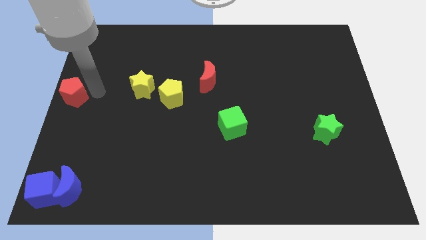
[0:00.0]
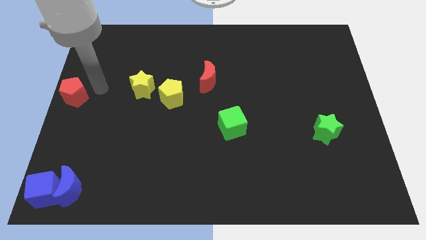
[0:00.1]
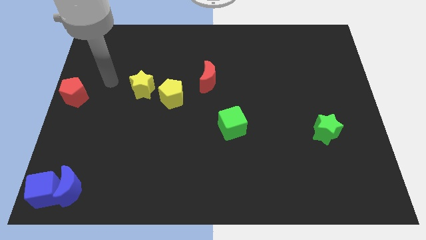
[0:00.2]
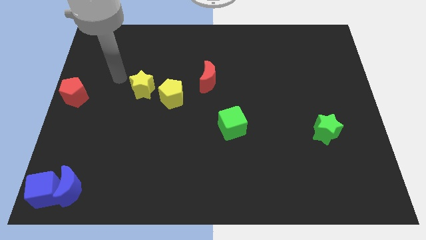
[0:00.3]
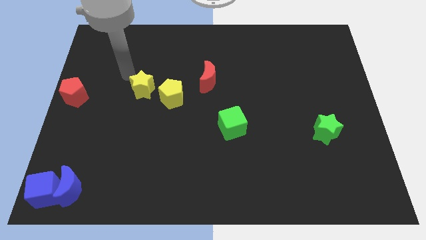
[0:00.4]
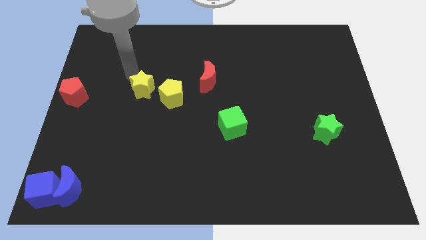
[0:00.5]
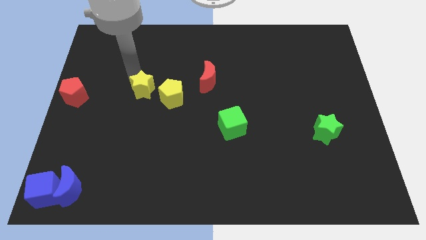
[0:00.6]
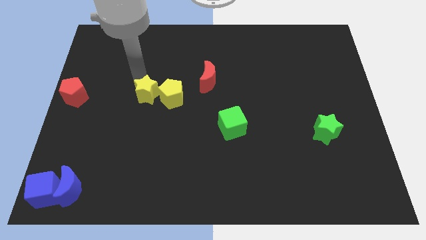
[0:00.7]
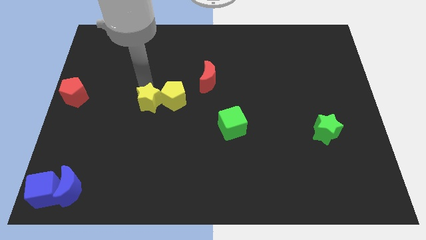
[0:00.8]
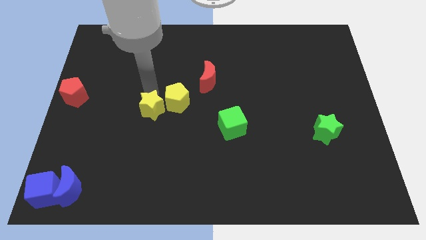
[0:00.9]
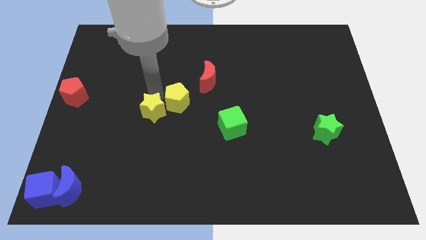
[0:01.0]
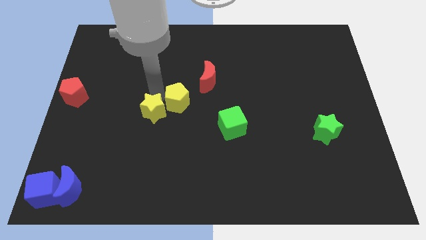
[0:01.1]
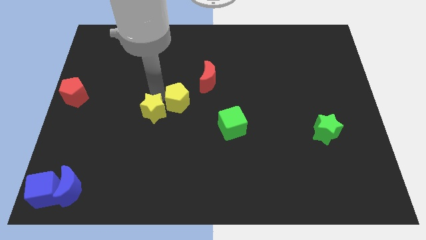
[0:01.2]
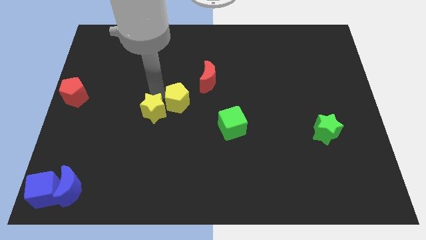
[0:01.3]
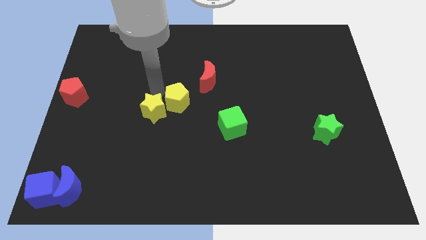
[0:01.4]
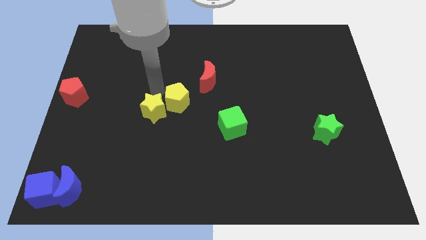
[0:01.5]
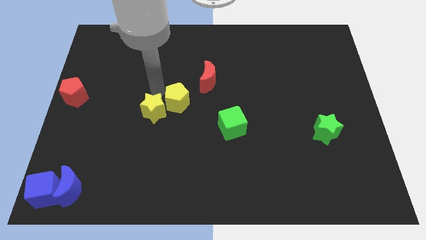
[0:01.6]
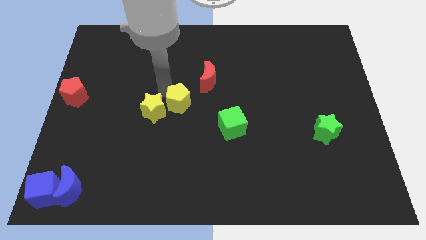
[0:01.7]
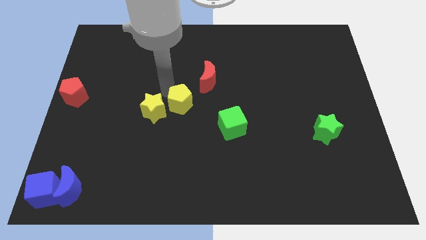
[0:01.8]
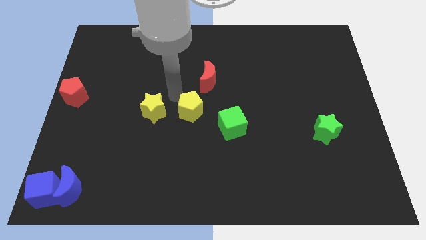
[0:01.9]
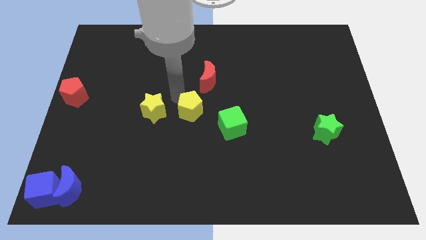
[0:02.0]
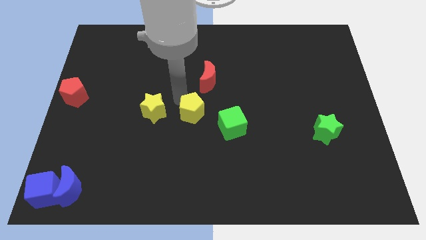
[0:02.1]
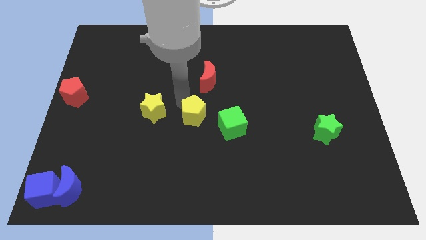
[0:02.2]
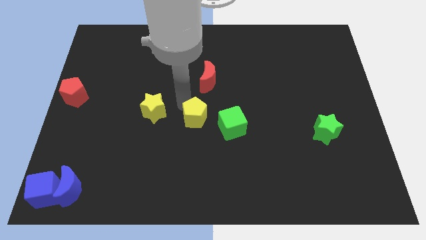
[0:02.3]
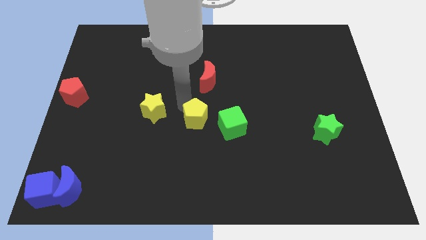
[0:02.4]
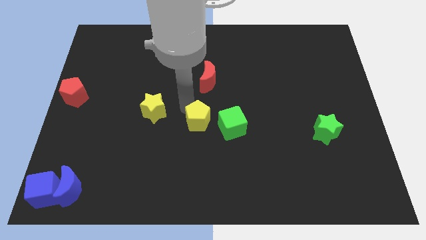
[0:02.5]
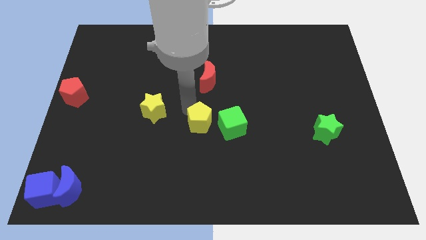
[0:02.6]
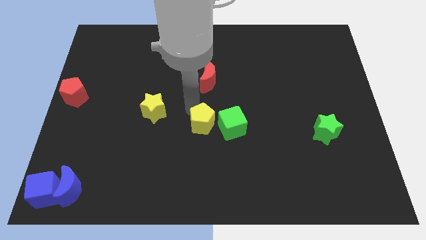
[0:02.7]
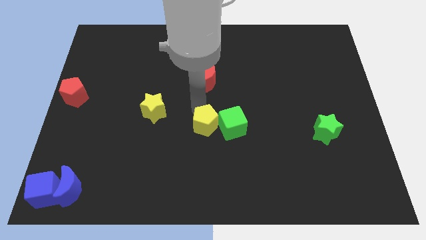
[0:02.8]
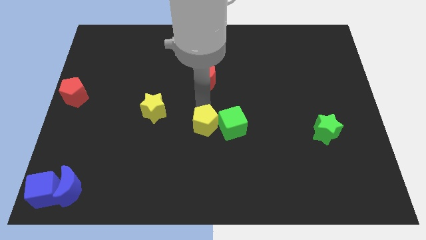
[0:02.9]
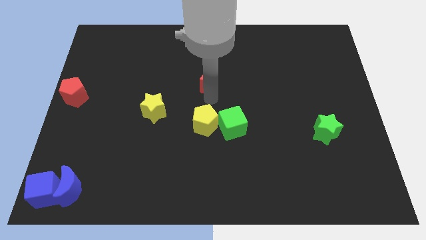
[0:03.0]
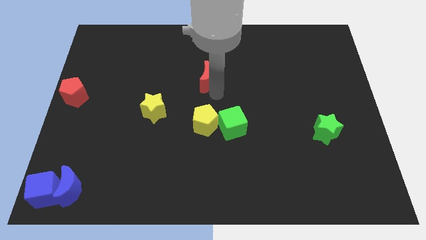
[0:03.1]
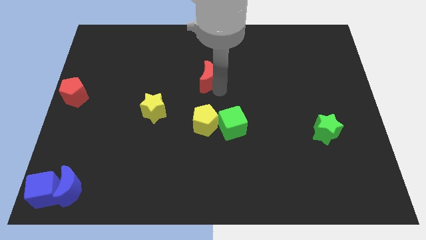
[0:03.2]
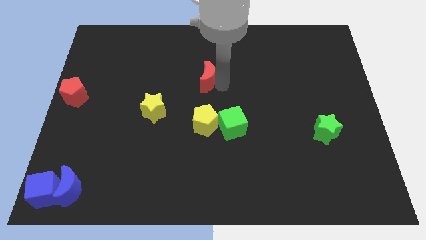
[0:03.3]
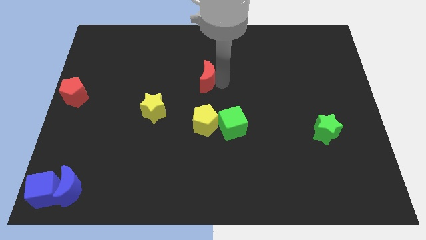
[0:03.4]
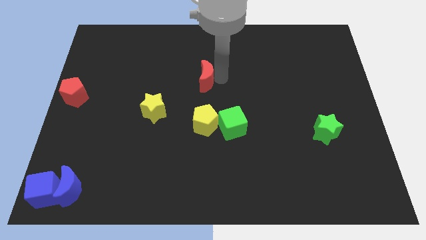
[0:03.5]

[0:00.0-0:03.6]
separate yellow blocks

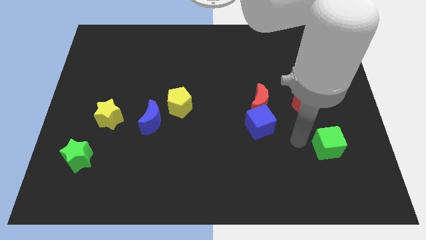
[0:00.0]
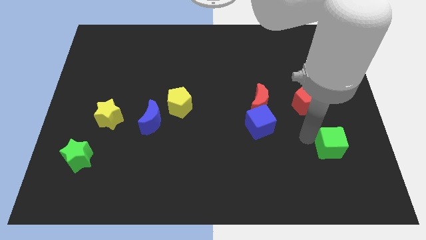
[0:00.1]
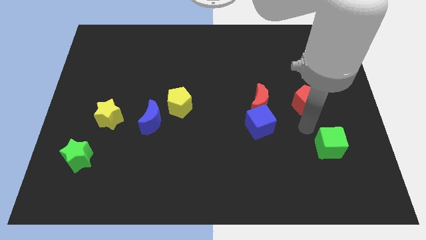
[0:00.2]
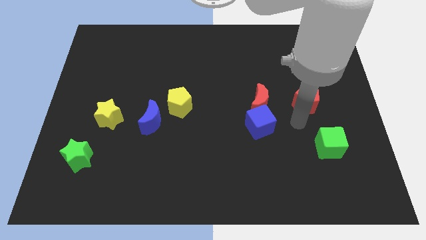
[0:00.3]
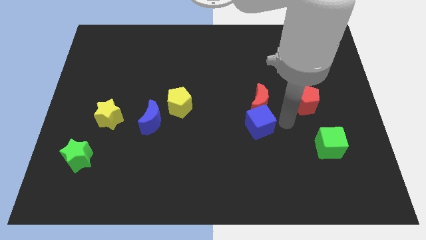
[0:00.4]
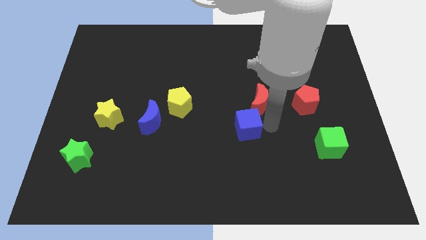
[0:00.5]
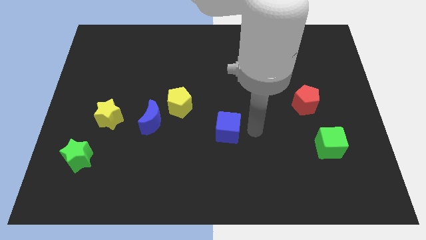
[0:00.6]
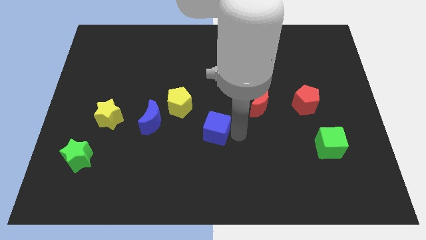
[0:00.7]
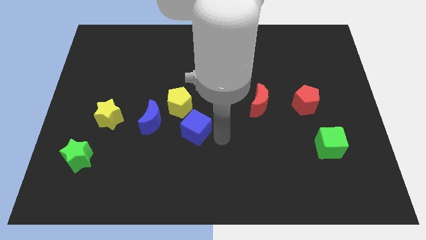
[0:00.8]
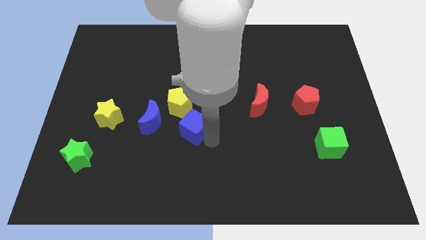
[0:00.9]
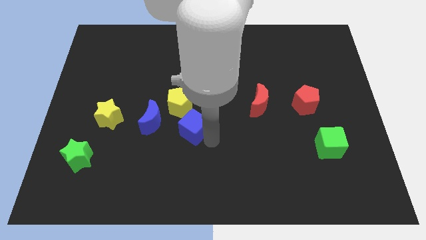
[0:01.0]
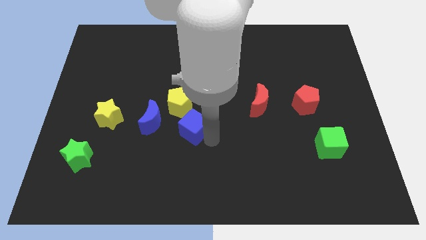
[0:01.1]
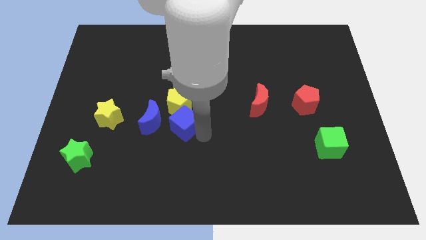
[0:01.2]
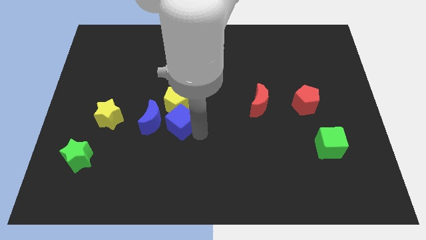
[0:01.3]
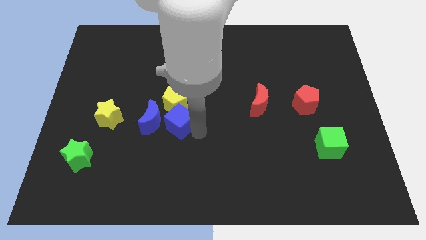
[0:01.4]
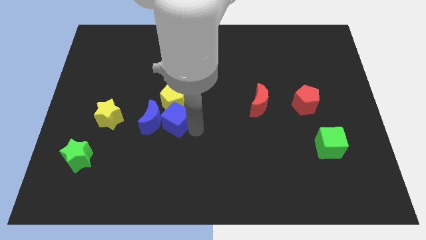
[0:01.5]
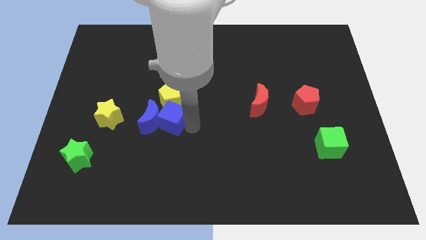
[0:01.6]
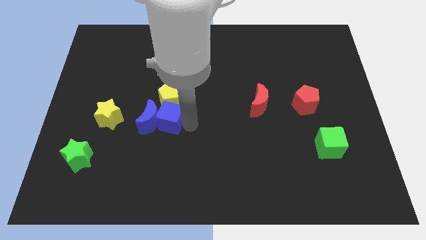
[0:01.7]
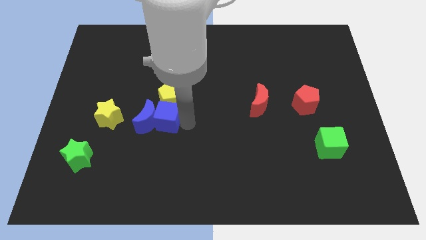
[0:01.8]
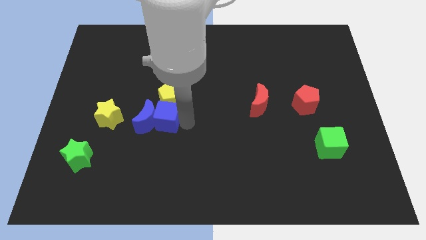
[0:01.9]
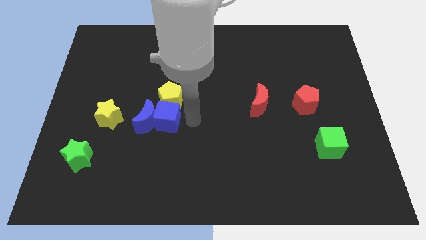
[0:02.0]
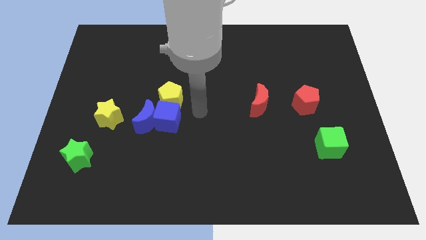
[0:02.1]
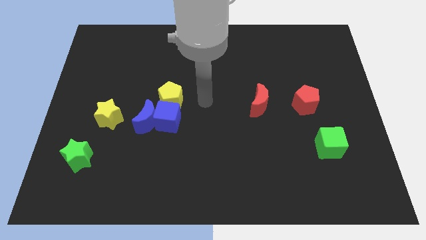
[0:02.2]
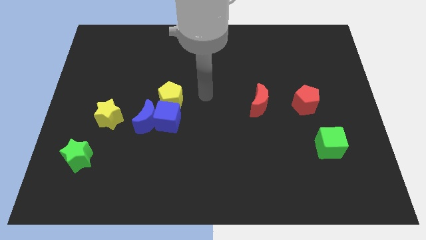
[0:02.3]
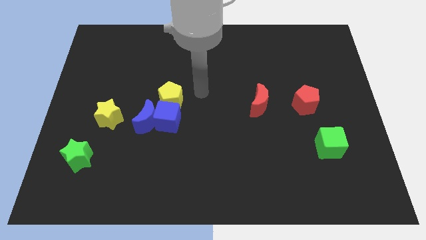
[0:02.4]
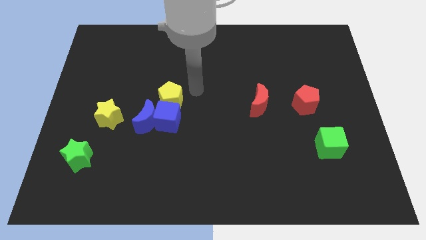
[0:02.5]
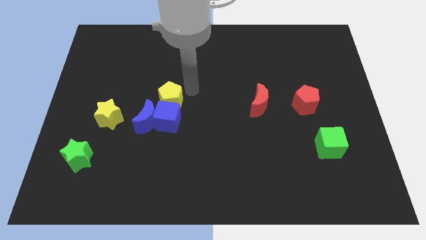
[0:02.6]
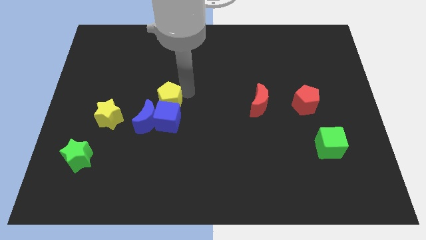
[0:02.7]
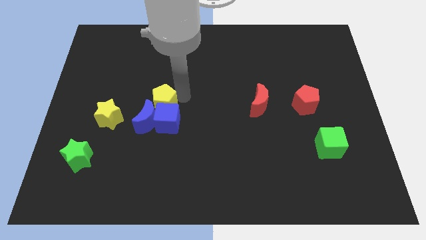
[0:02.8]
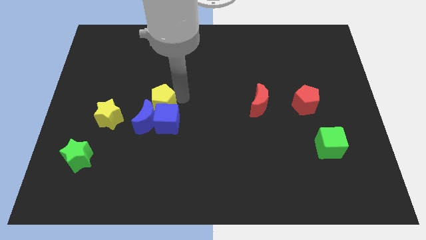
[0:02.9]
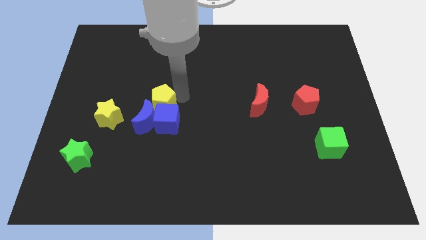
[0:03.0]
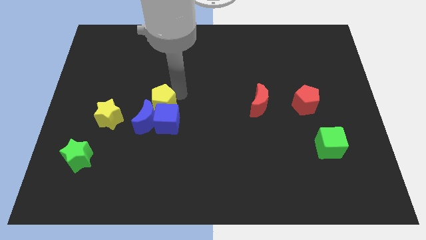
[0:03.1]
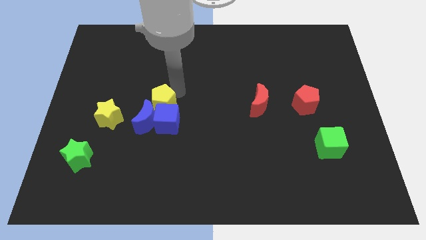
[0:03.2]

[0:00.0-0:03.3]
push the blue cube into the blue cube

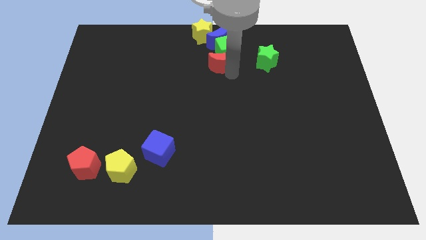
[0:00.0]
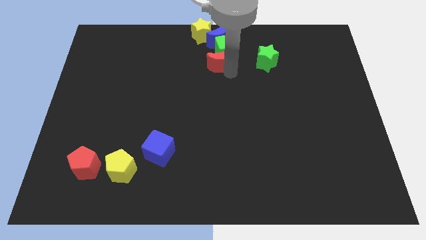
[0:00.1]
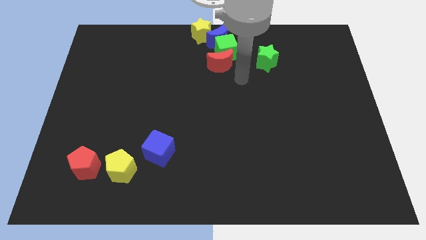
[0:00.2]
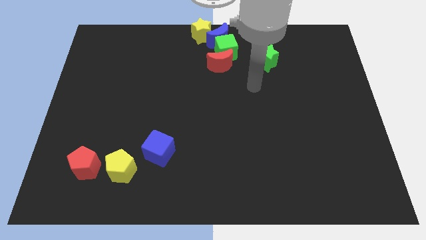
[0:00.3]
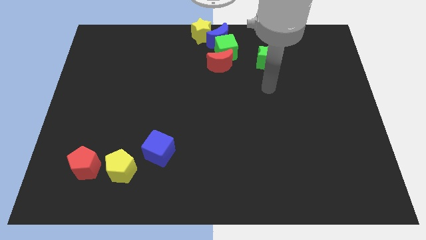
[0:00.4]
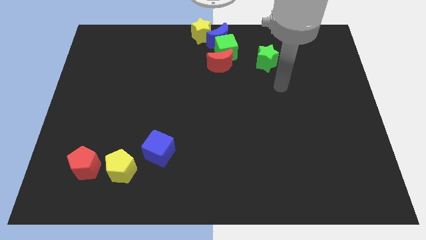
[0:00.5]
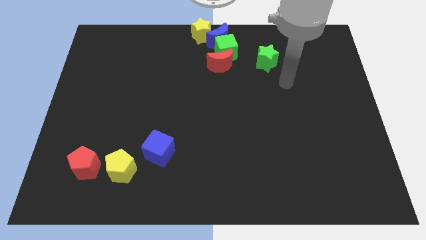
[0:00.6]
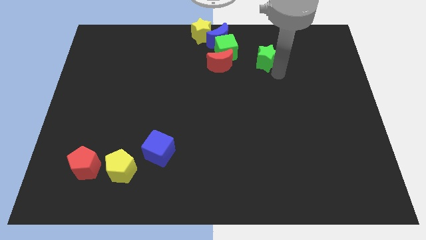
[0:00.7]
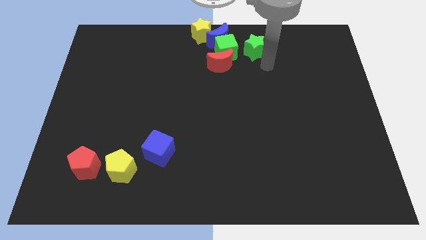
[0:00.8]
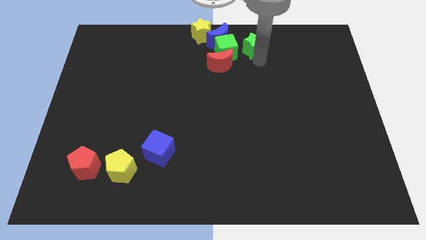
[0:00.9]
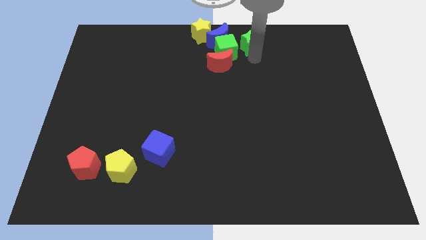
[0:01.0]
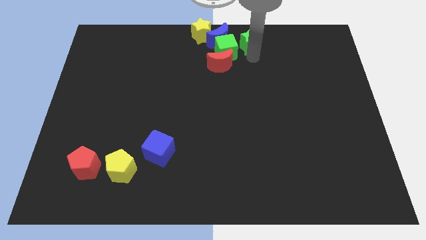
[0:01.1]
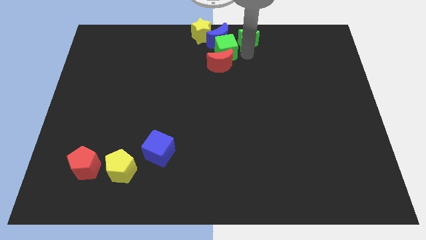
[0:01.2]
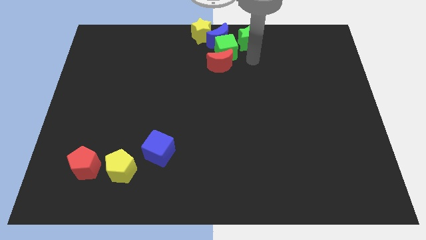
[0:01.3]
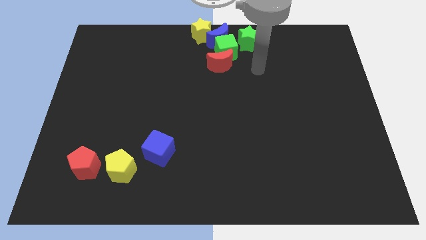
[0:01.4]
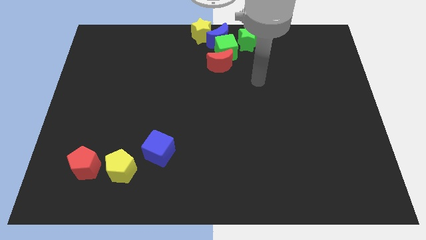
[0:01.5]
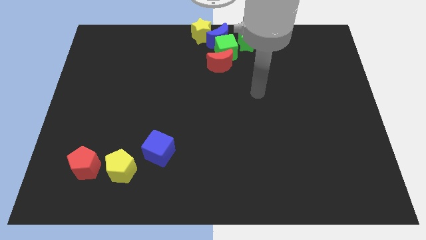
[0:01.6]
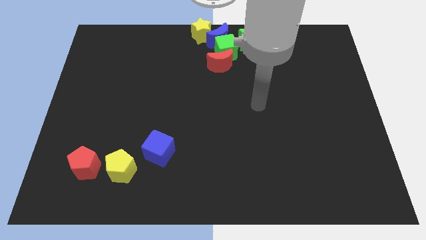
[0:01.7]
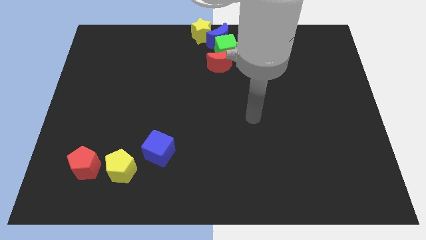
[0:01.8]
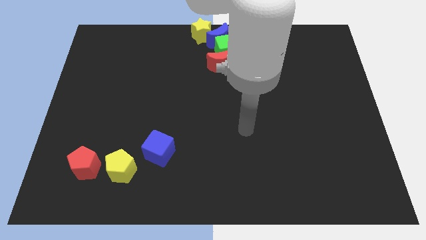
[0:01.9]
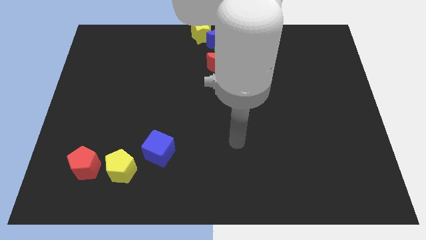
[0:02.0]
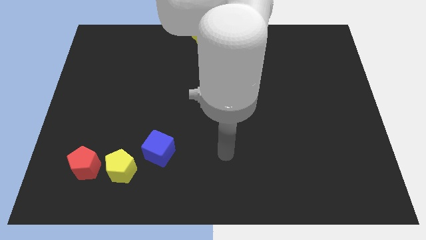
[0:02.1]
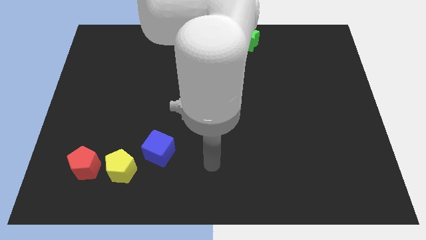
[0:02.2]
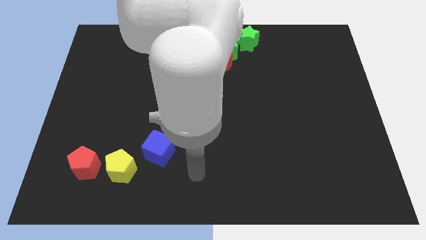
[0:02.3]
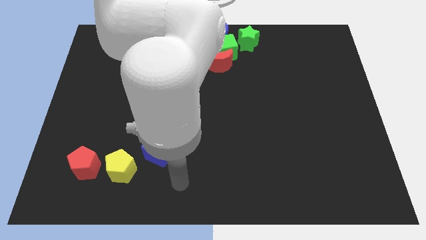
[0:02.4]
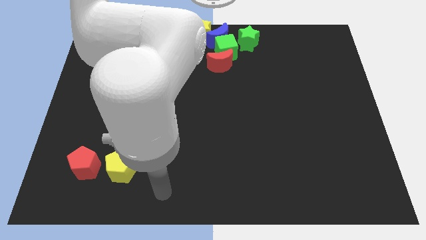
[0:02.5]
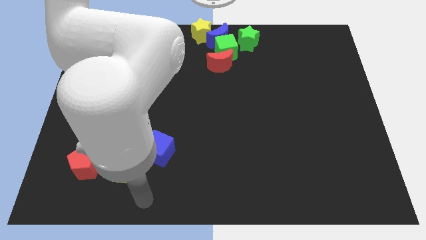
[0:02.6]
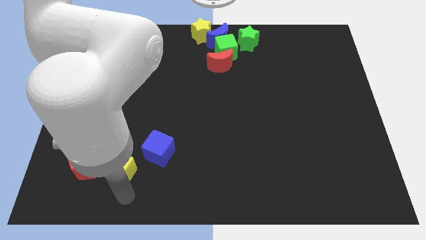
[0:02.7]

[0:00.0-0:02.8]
push the green star beside the green cube
